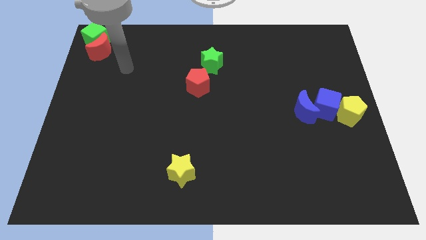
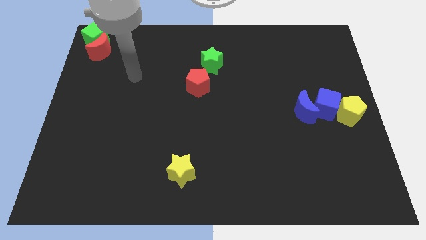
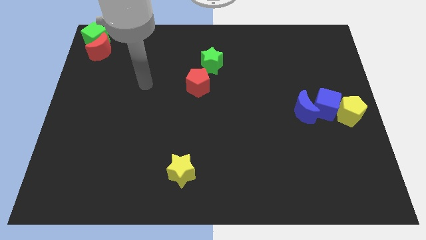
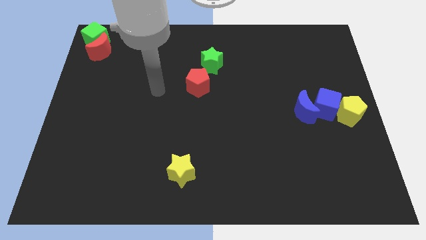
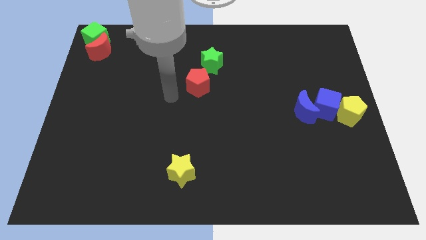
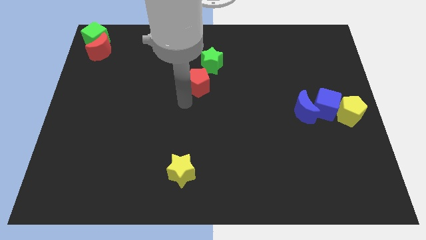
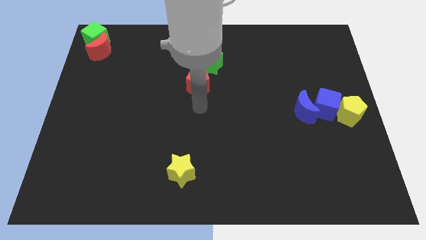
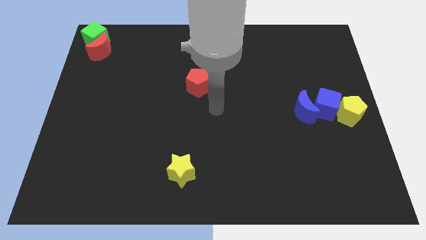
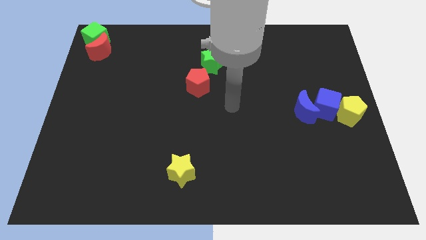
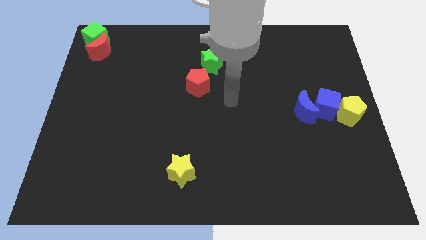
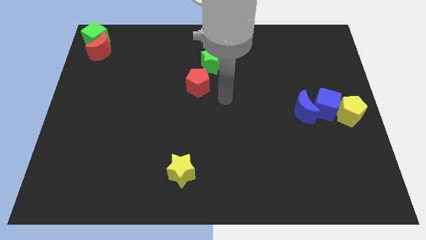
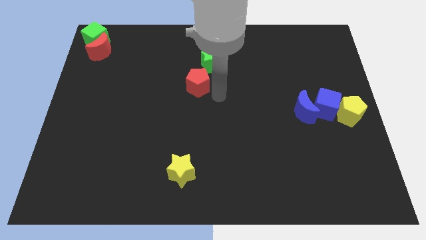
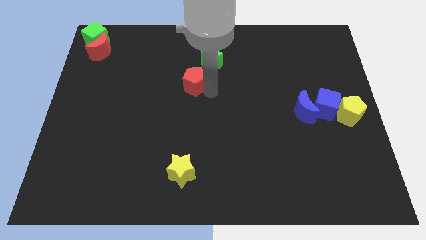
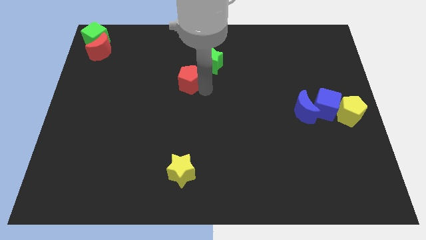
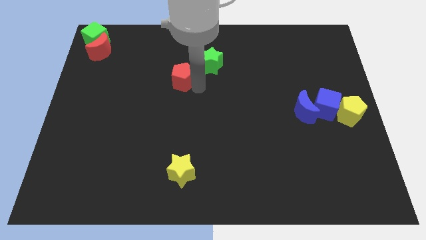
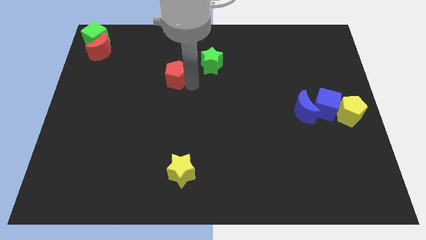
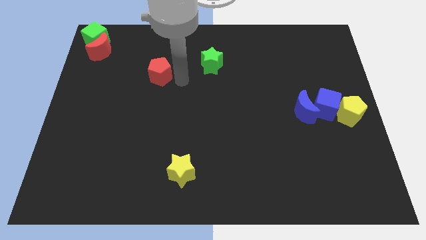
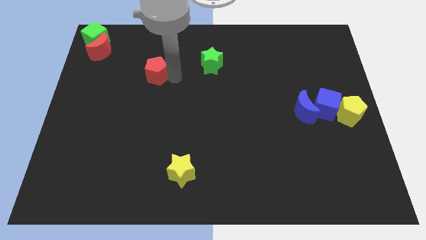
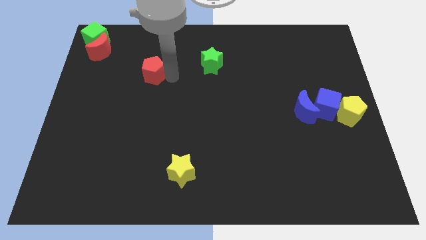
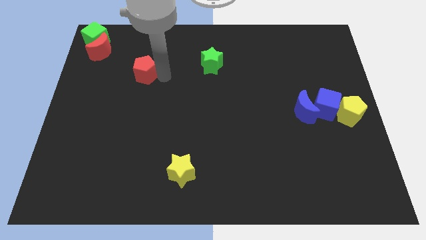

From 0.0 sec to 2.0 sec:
slide the red pentagon slightly to the left

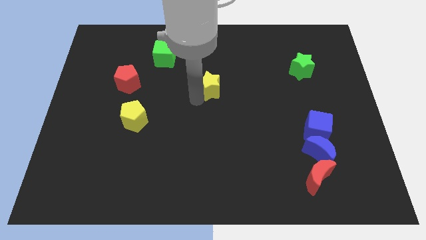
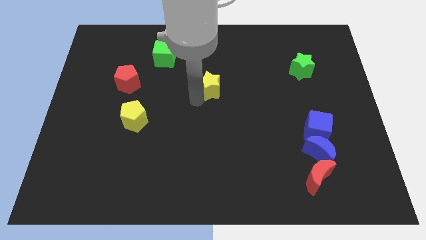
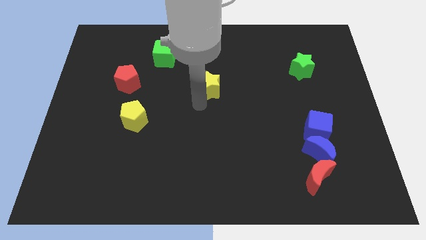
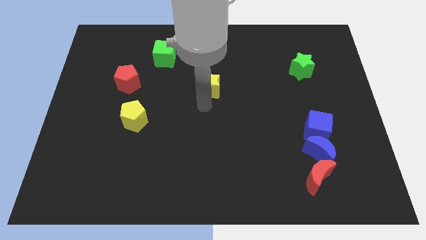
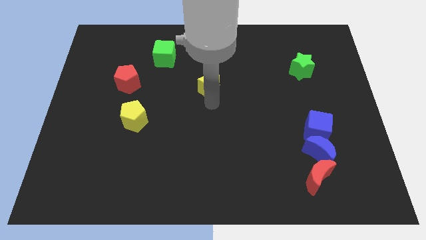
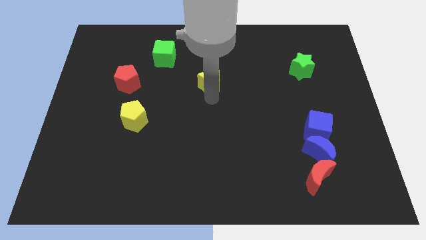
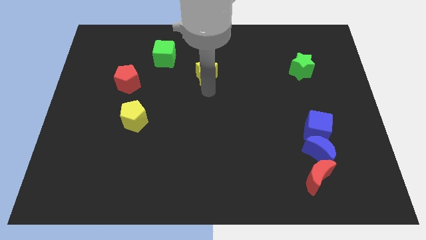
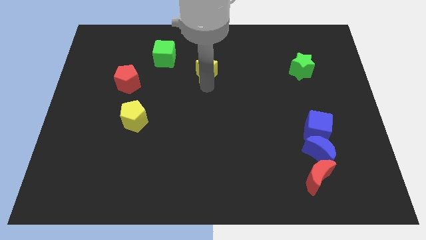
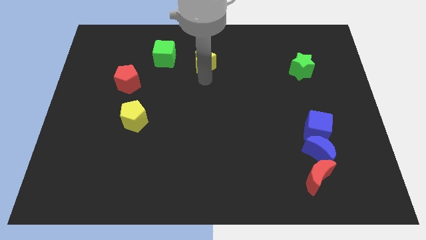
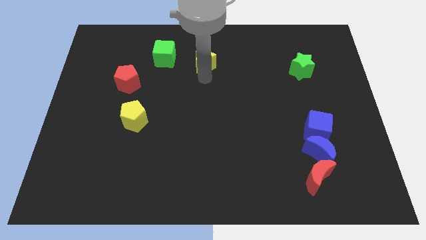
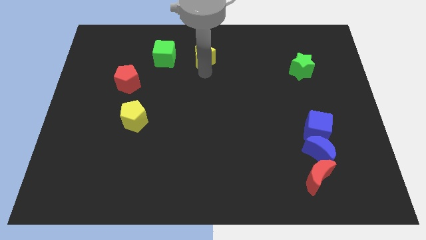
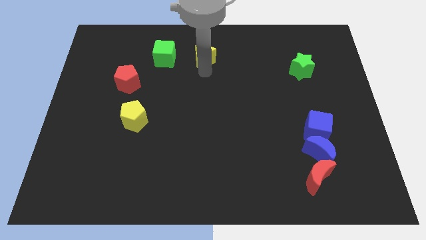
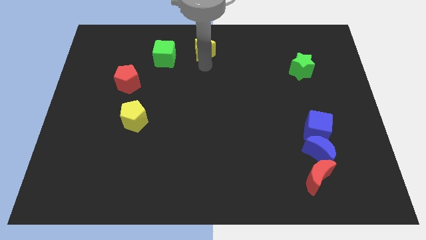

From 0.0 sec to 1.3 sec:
move the yellow star parallel to green cube

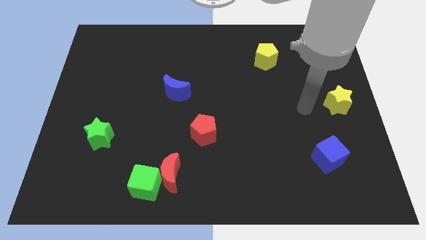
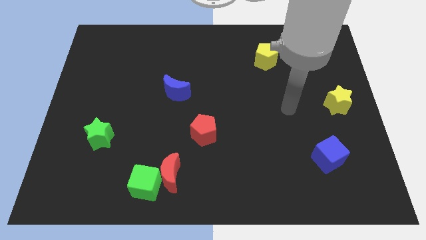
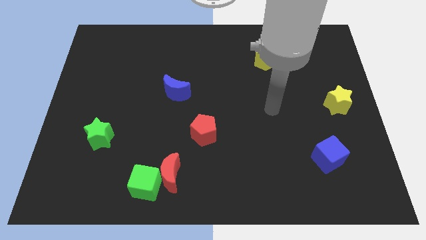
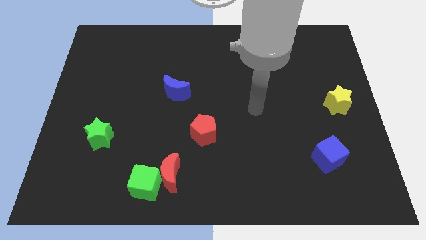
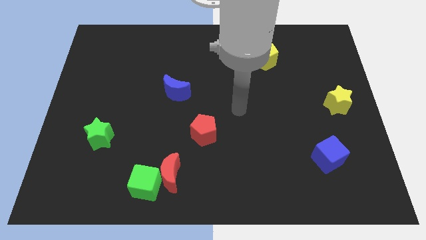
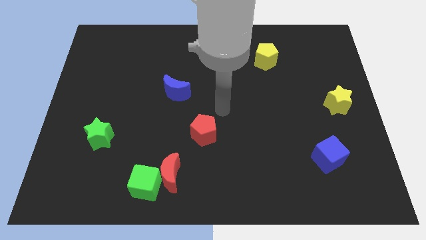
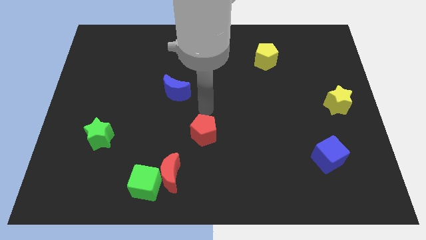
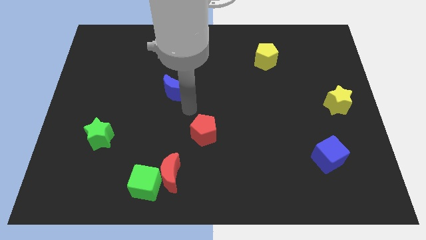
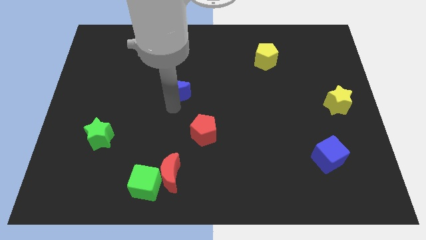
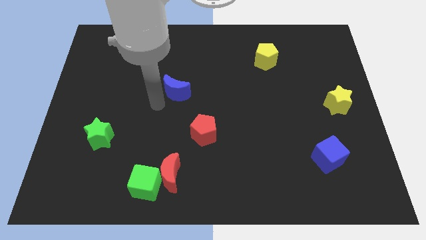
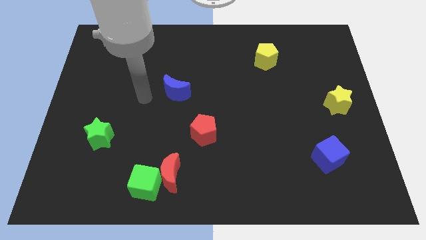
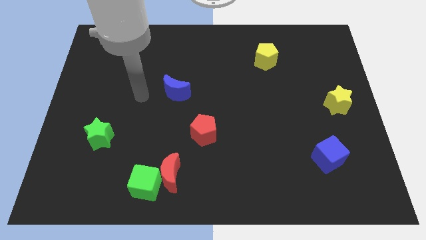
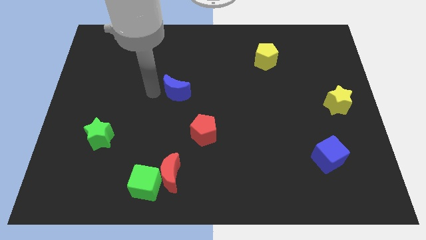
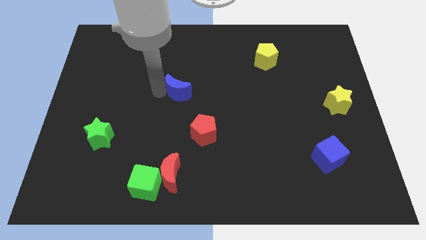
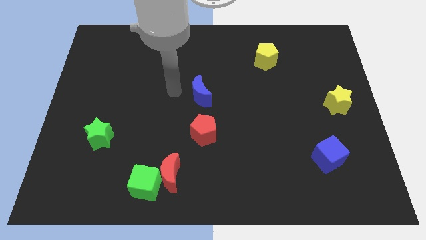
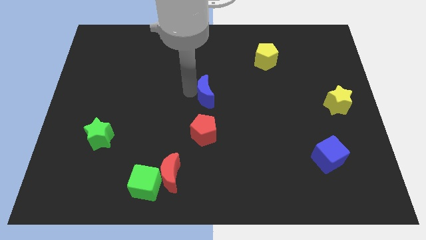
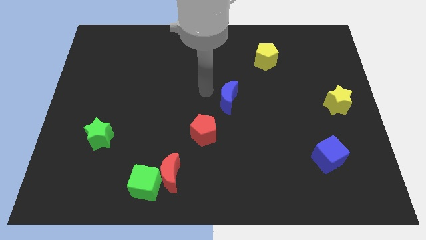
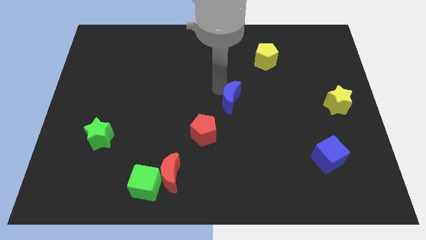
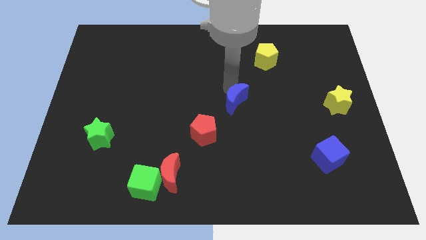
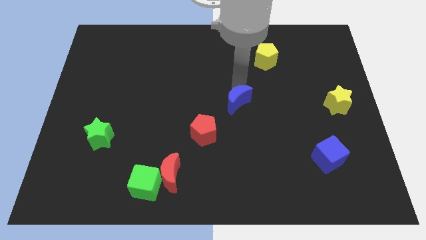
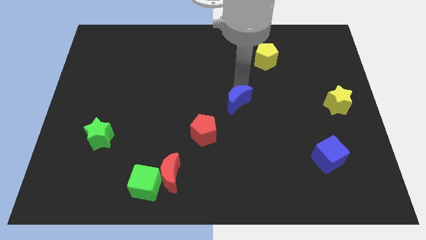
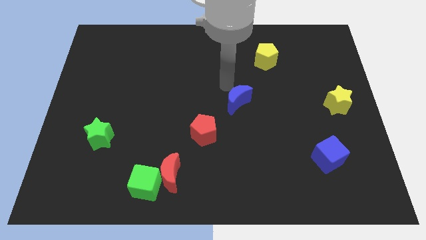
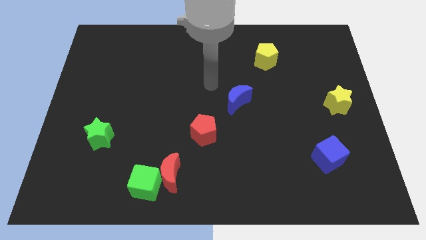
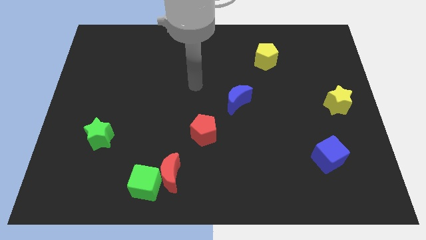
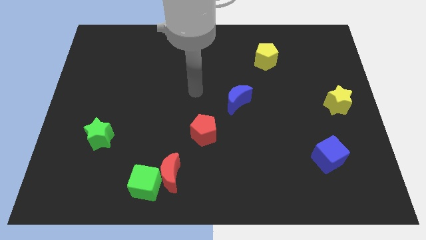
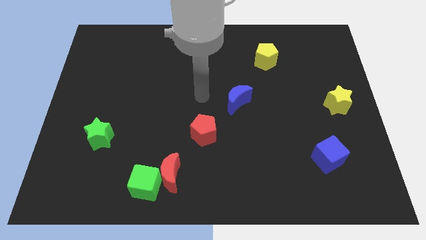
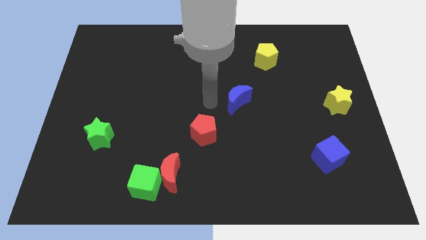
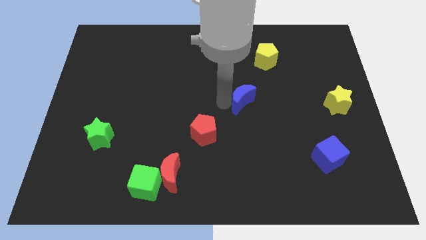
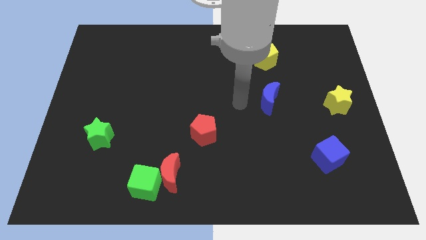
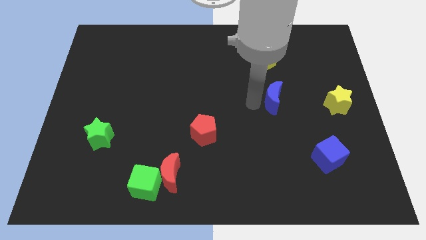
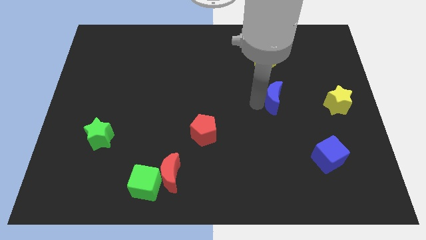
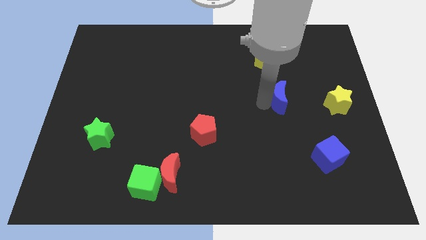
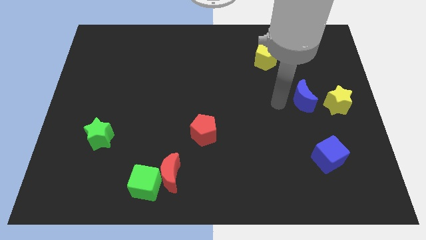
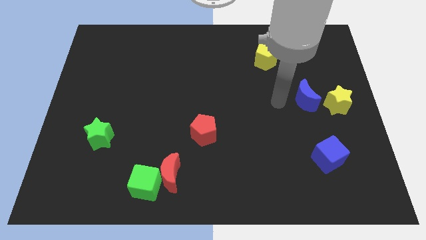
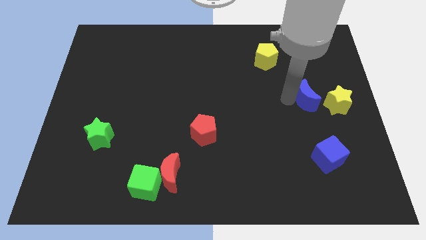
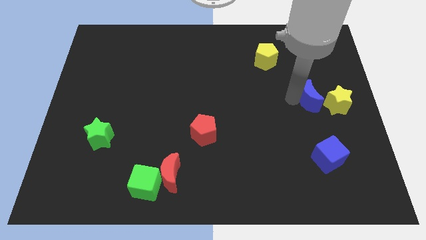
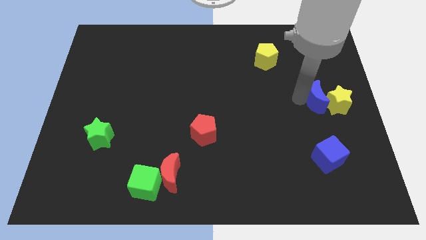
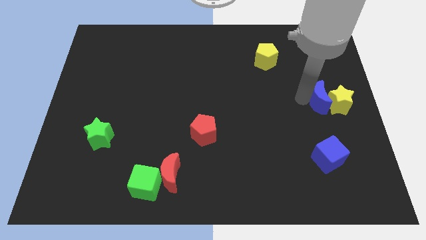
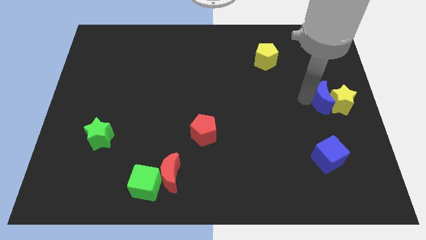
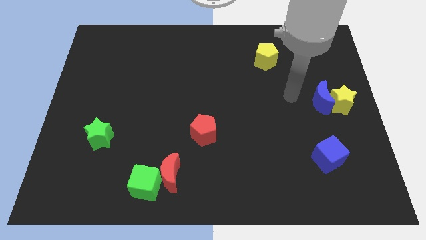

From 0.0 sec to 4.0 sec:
slide the blue moon into the yellow star

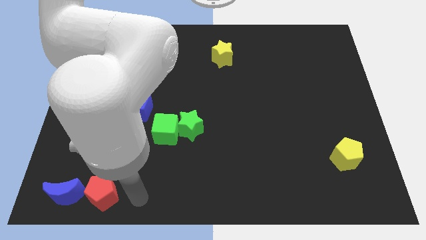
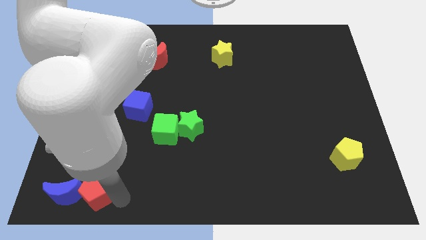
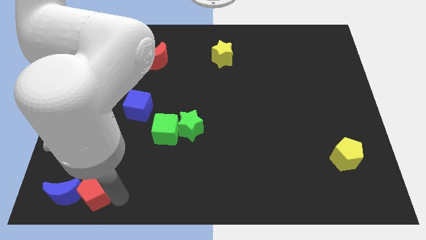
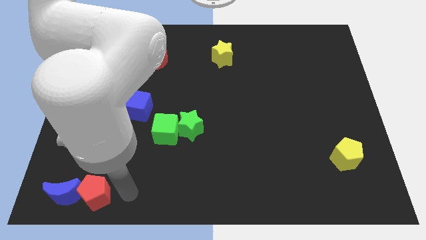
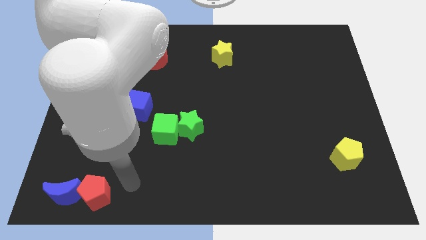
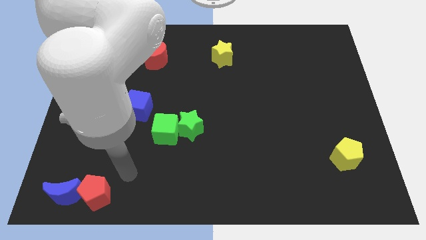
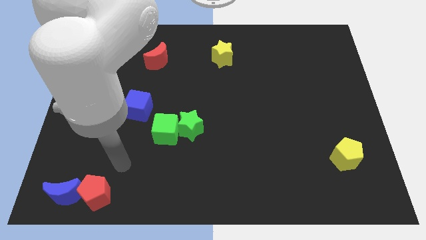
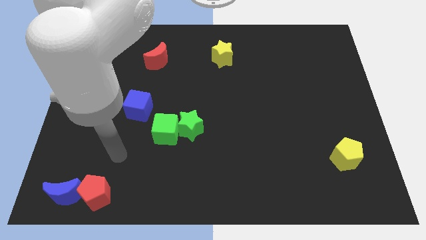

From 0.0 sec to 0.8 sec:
move the red pentagon to the left of the blue crescent

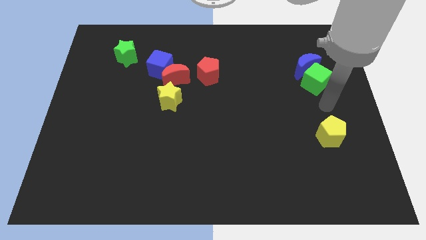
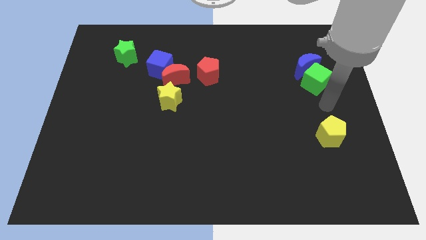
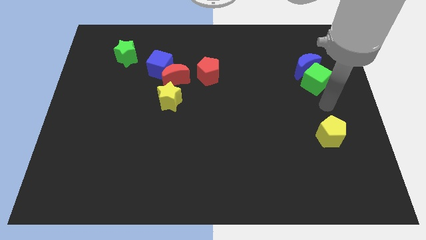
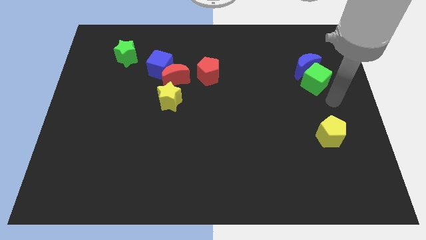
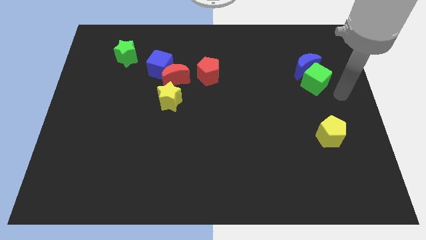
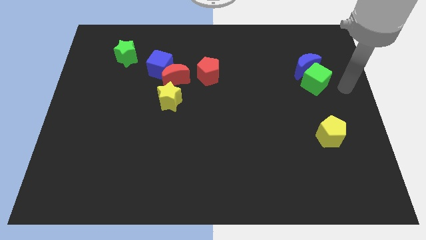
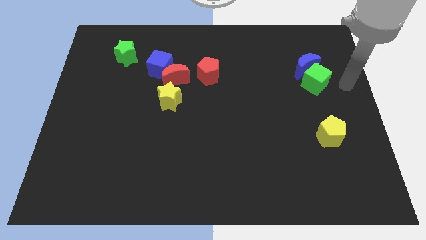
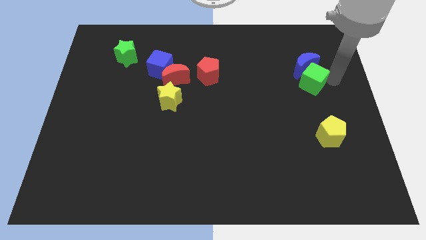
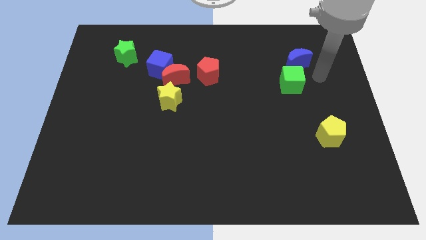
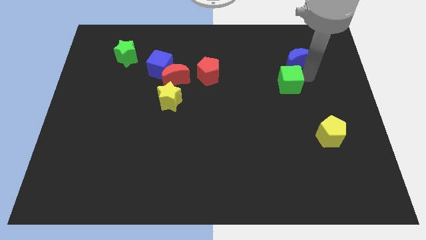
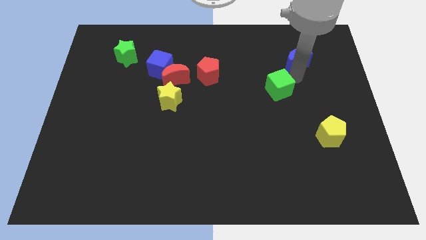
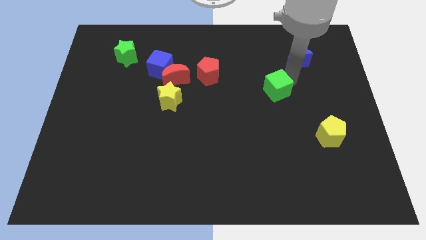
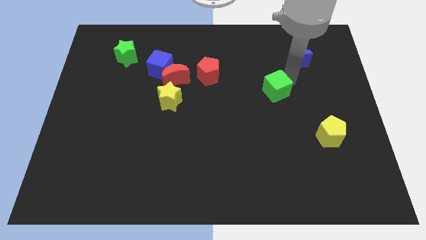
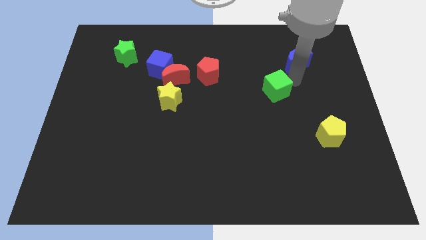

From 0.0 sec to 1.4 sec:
push the green cube to the bottom left side of the blue crescent
